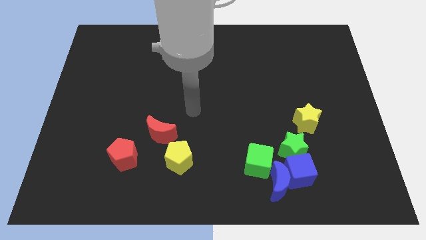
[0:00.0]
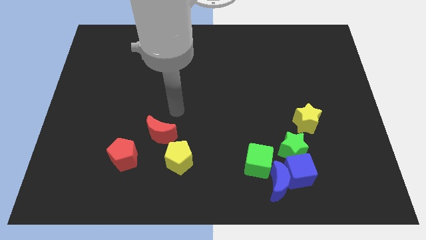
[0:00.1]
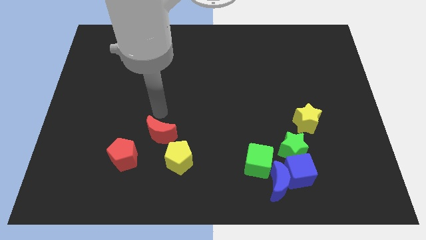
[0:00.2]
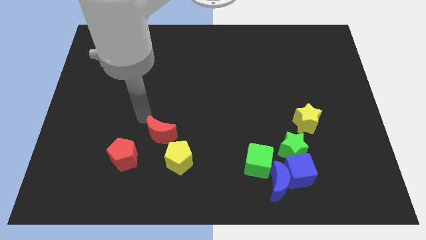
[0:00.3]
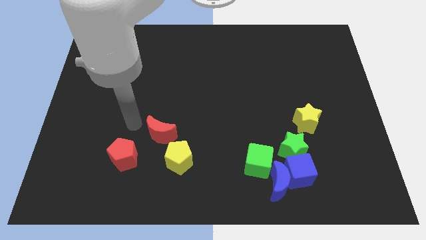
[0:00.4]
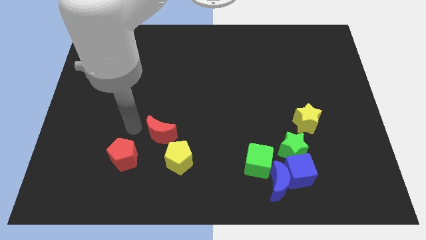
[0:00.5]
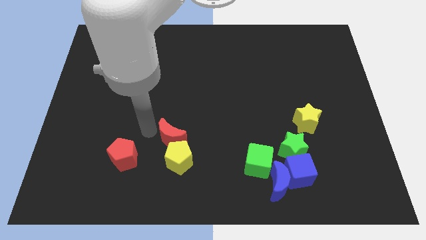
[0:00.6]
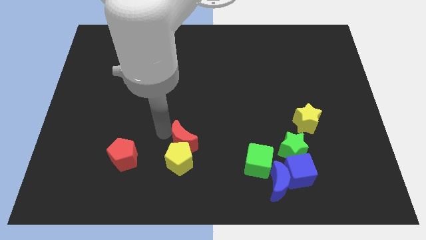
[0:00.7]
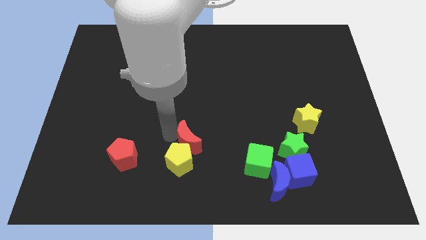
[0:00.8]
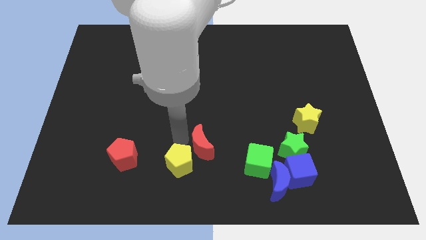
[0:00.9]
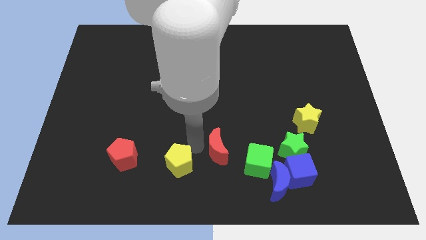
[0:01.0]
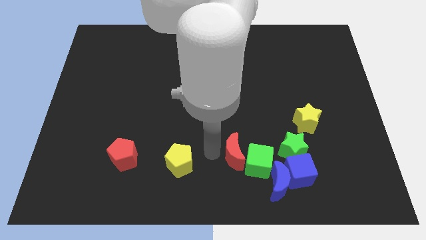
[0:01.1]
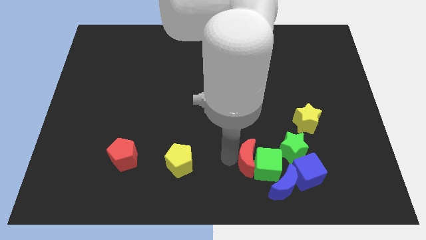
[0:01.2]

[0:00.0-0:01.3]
push the red crescent to the left of the green cube

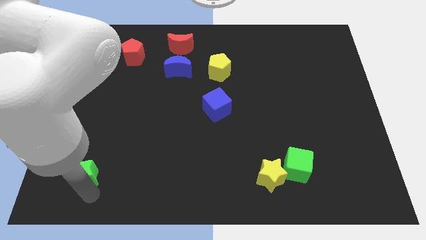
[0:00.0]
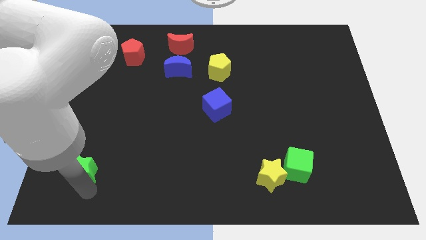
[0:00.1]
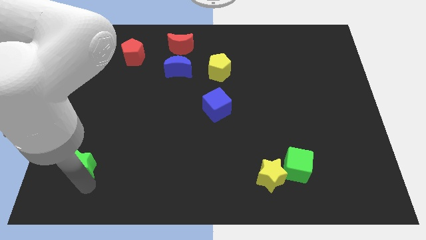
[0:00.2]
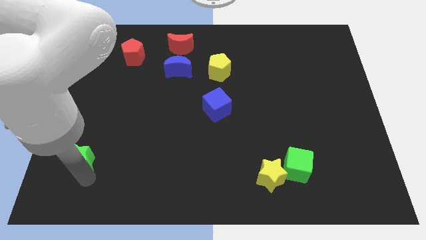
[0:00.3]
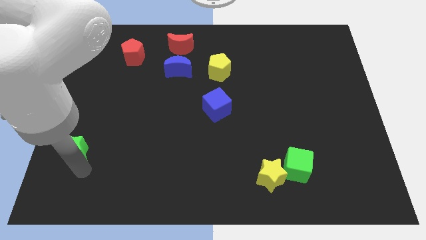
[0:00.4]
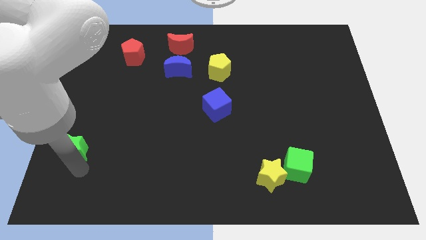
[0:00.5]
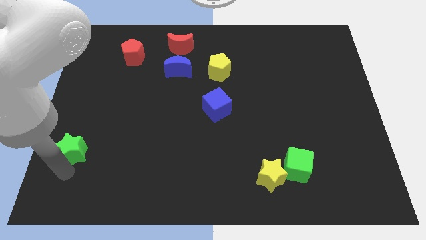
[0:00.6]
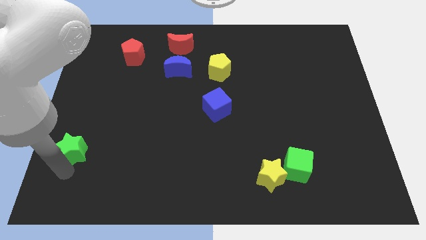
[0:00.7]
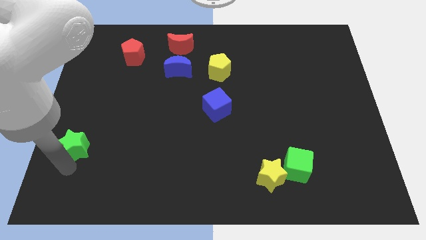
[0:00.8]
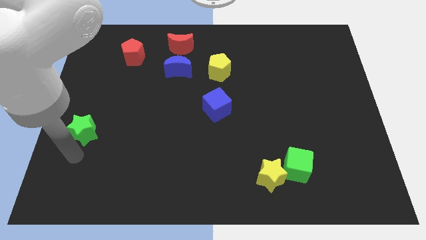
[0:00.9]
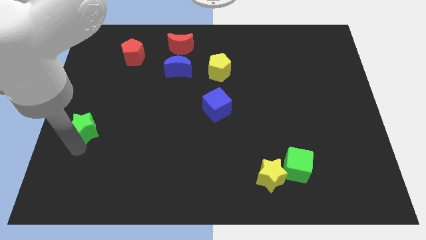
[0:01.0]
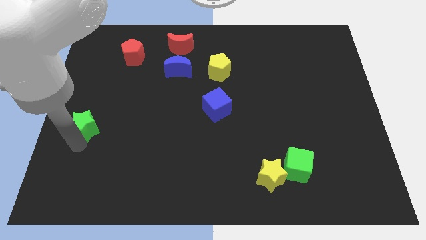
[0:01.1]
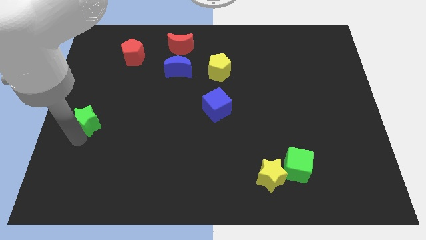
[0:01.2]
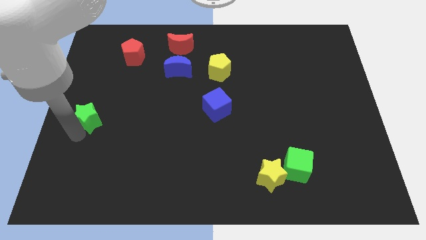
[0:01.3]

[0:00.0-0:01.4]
push the green star to the top of the board

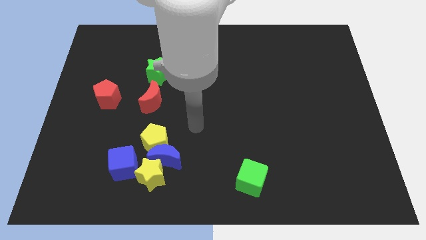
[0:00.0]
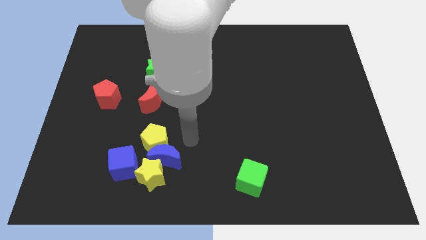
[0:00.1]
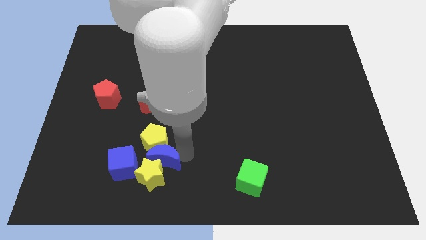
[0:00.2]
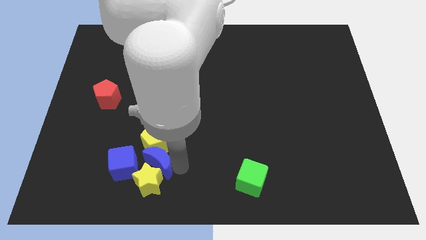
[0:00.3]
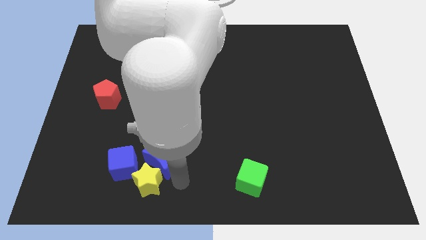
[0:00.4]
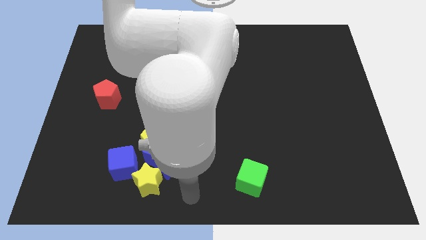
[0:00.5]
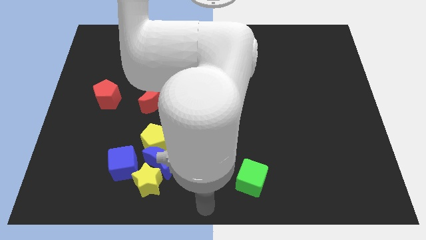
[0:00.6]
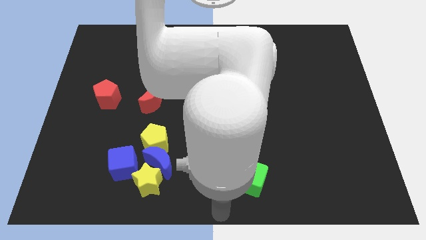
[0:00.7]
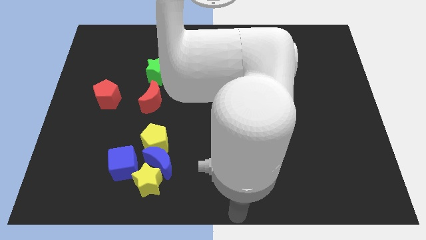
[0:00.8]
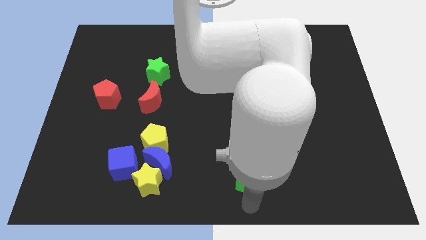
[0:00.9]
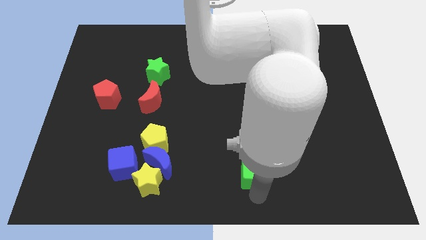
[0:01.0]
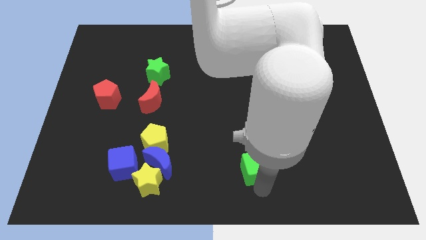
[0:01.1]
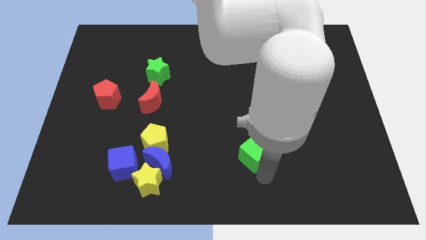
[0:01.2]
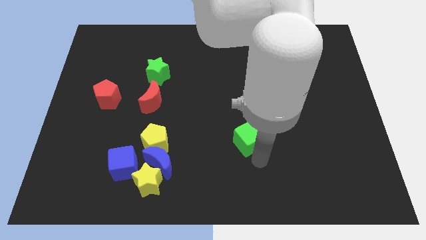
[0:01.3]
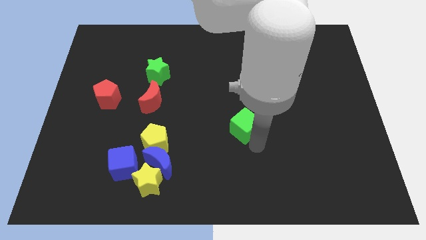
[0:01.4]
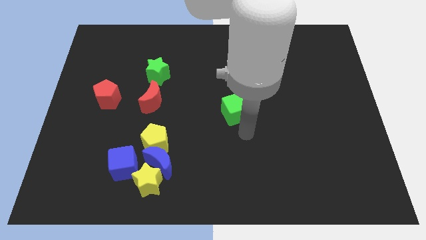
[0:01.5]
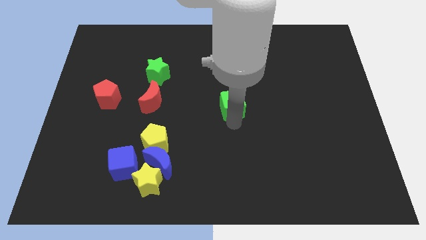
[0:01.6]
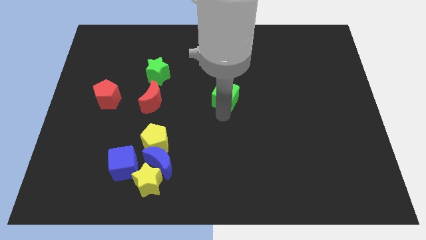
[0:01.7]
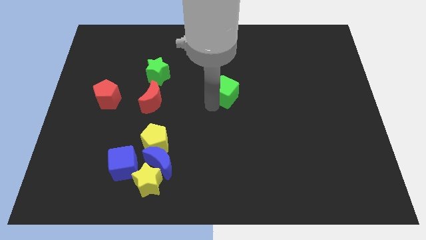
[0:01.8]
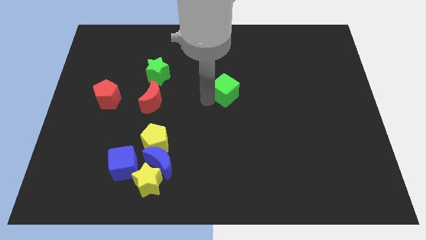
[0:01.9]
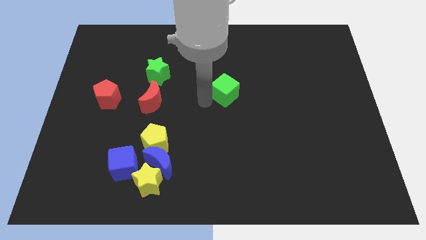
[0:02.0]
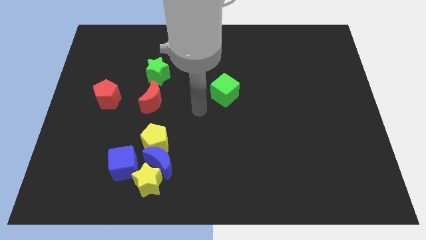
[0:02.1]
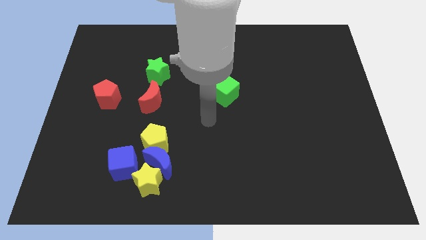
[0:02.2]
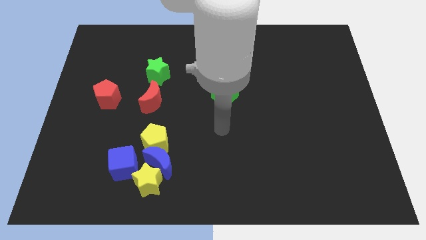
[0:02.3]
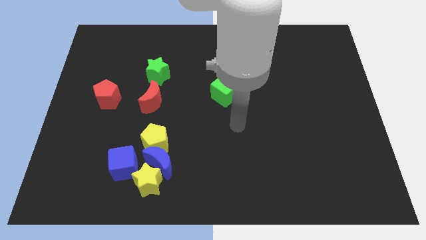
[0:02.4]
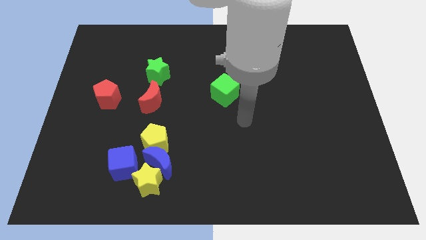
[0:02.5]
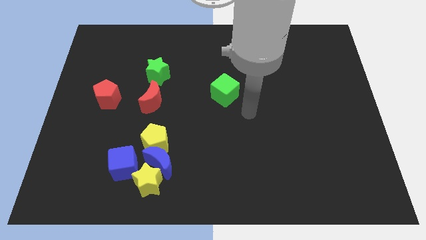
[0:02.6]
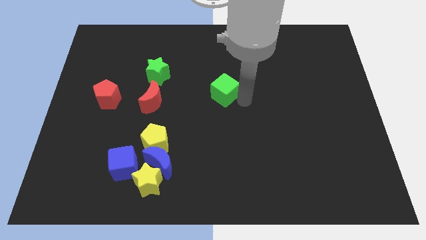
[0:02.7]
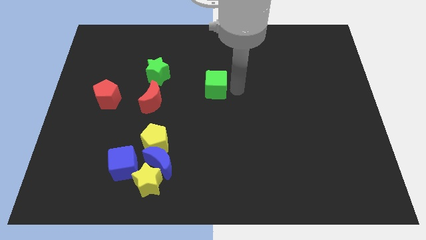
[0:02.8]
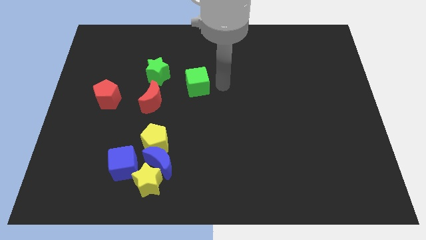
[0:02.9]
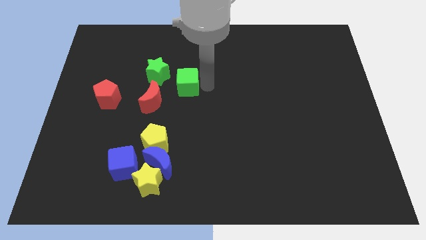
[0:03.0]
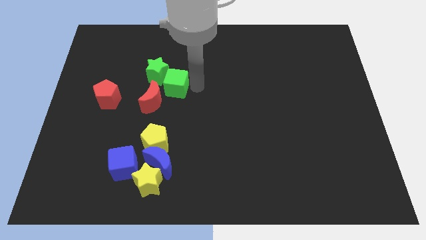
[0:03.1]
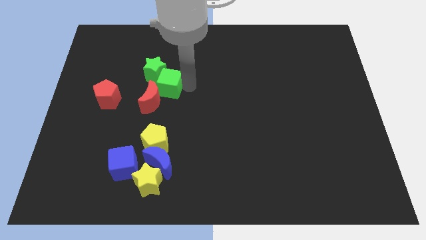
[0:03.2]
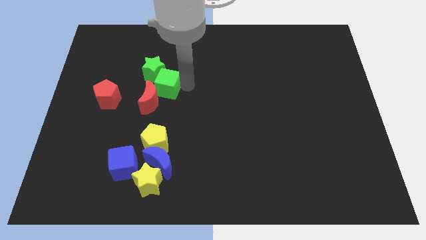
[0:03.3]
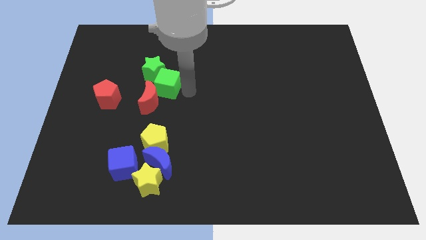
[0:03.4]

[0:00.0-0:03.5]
push the green cube into the red crescent and green star

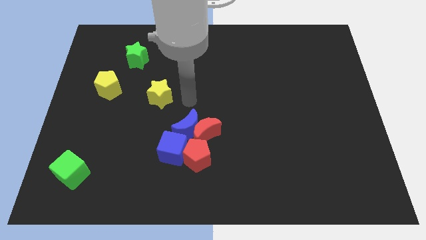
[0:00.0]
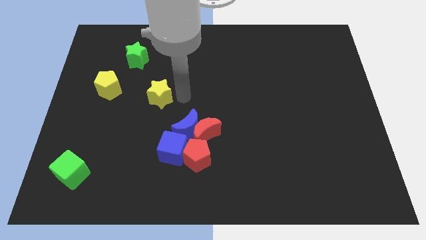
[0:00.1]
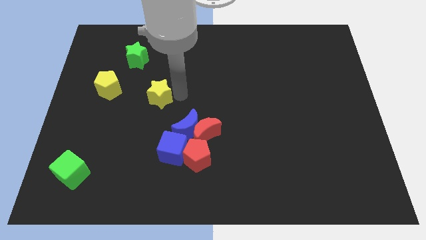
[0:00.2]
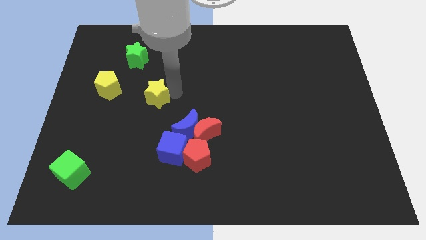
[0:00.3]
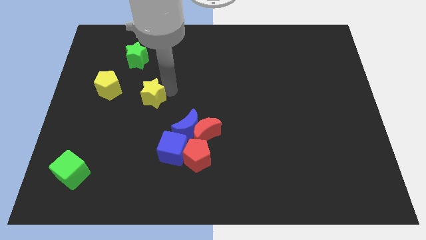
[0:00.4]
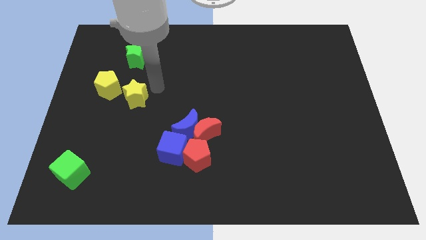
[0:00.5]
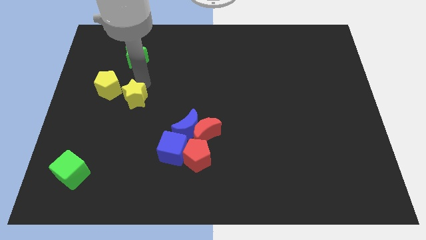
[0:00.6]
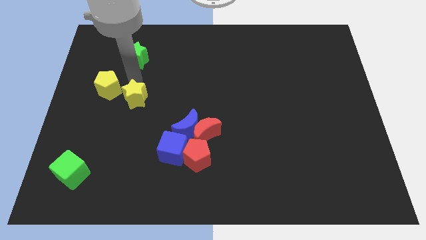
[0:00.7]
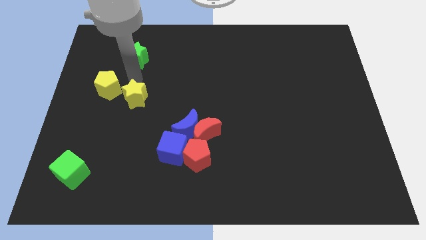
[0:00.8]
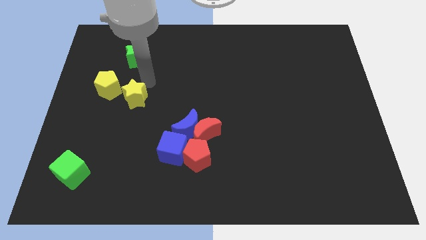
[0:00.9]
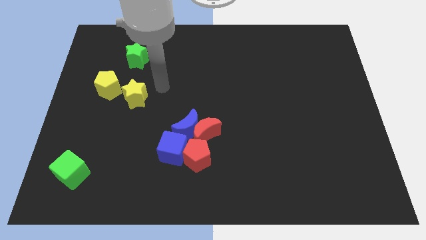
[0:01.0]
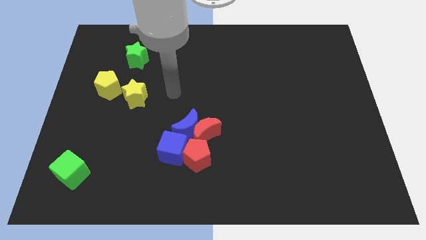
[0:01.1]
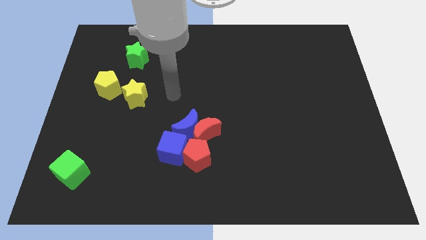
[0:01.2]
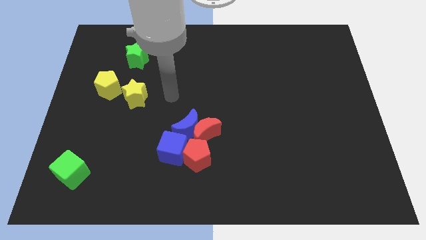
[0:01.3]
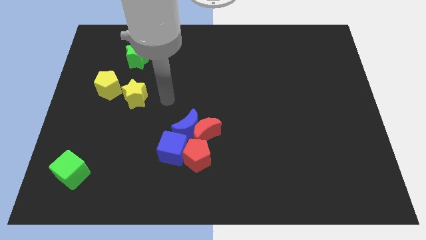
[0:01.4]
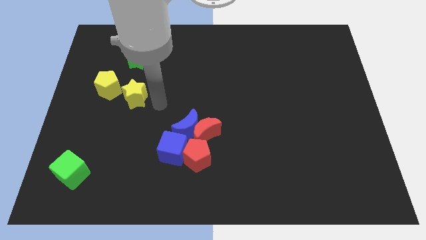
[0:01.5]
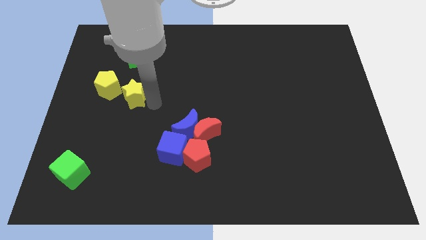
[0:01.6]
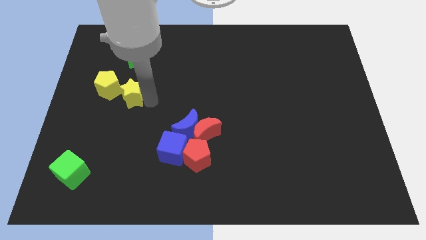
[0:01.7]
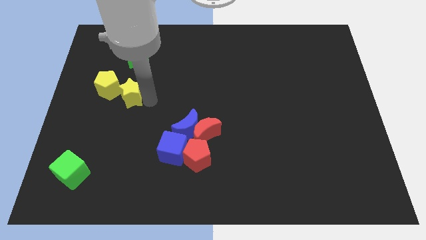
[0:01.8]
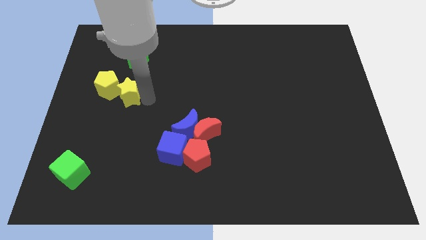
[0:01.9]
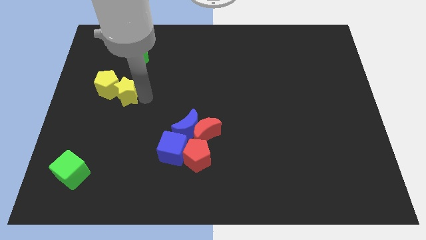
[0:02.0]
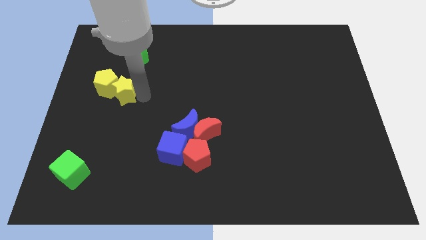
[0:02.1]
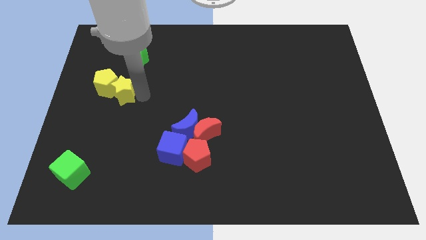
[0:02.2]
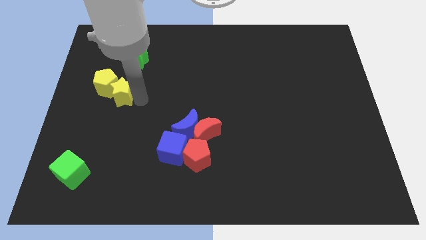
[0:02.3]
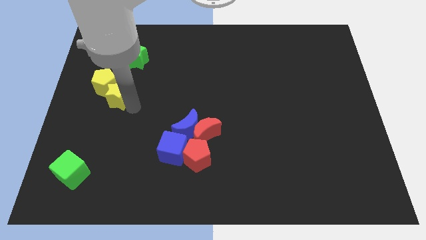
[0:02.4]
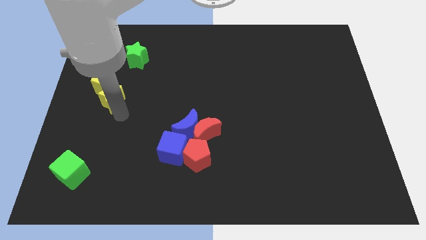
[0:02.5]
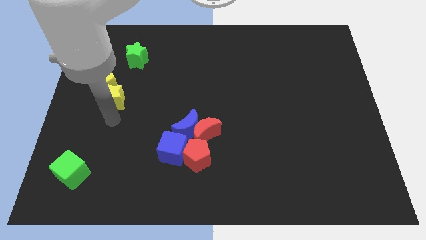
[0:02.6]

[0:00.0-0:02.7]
push yellow star slightly towards upwards
